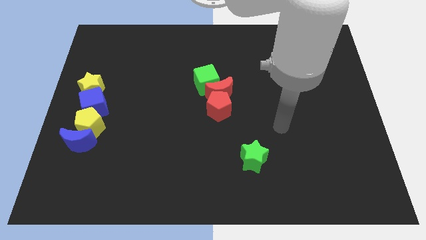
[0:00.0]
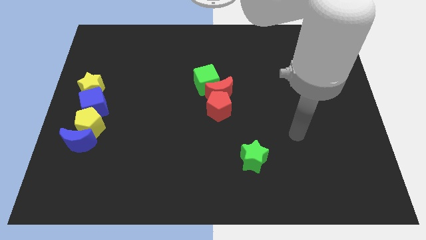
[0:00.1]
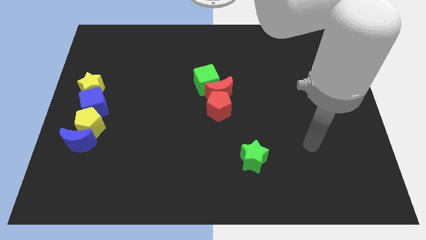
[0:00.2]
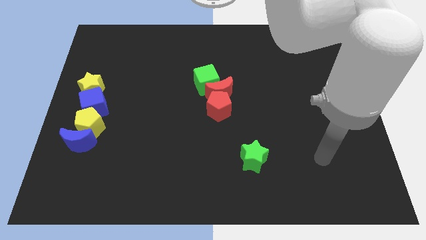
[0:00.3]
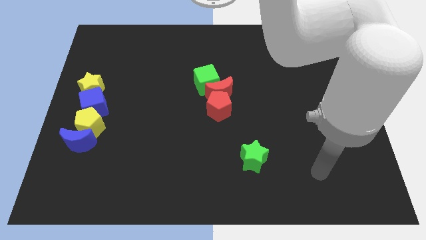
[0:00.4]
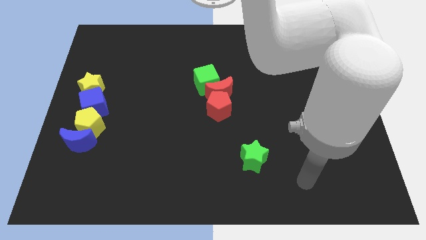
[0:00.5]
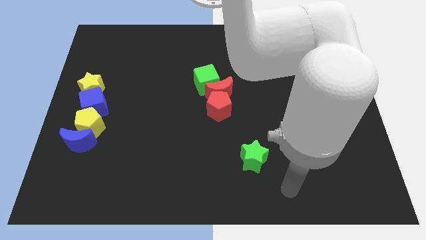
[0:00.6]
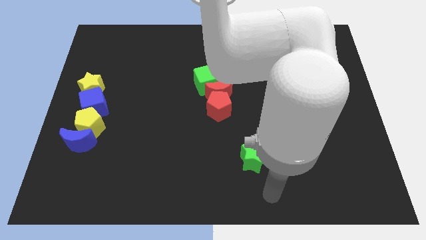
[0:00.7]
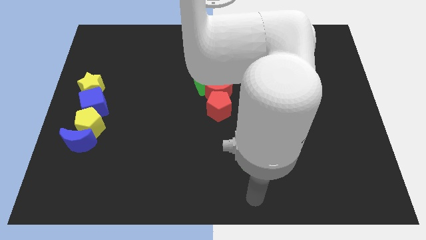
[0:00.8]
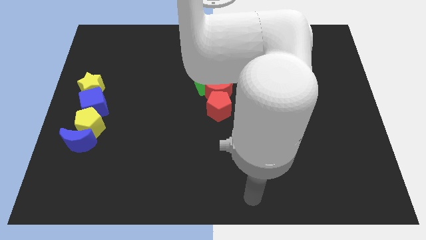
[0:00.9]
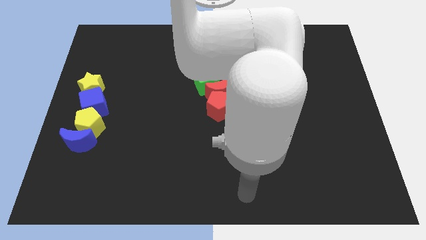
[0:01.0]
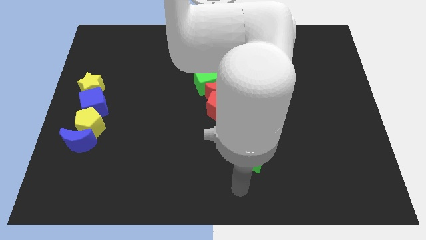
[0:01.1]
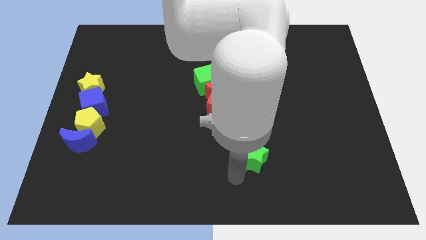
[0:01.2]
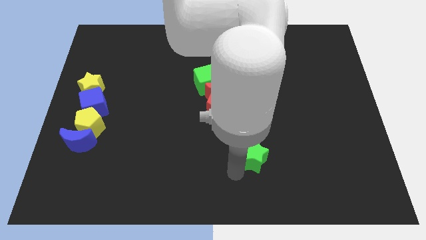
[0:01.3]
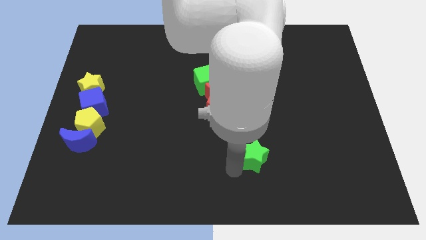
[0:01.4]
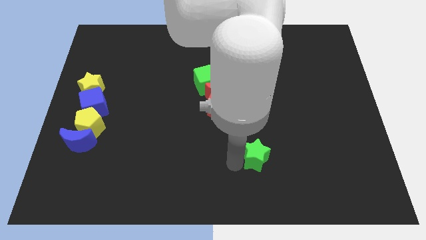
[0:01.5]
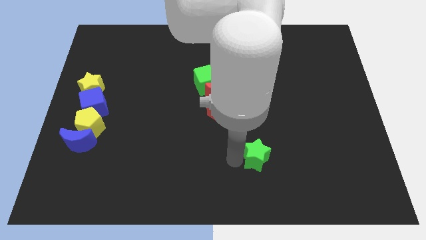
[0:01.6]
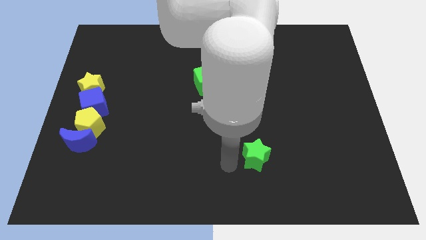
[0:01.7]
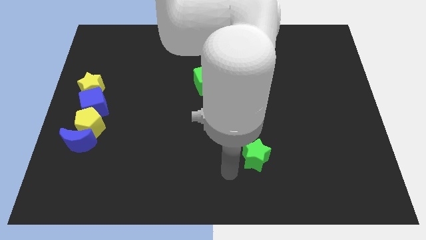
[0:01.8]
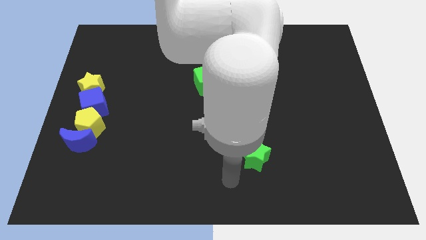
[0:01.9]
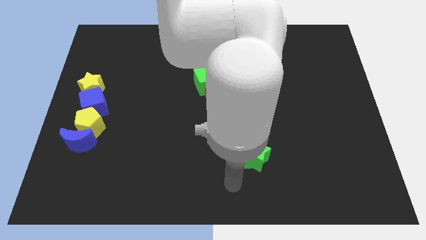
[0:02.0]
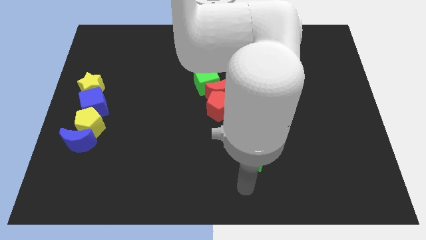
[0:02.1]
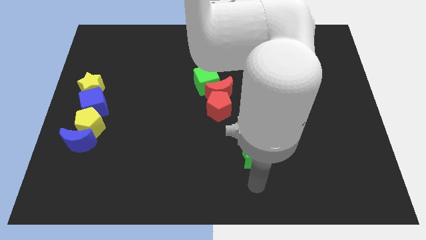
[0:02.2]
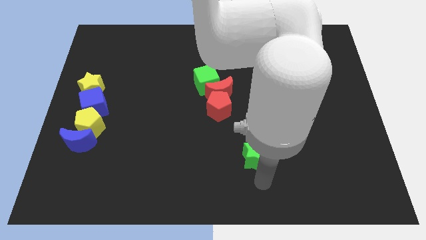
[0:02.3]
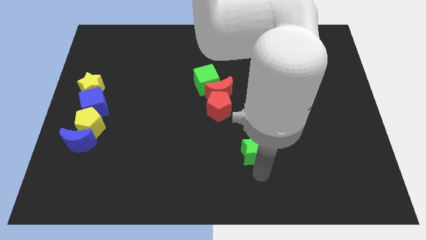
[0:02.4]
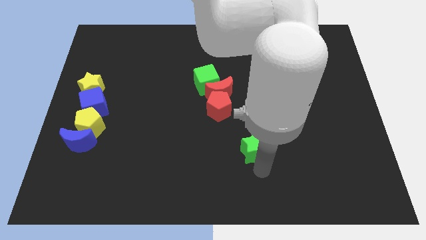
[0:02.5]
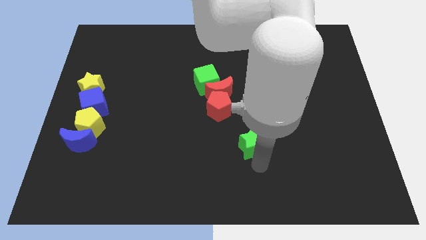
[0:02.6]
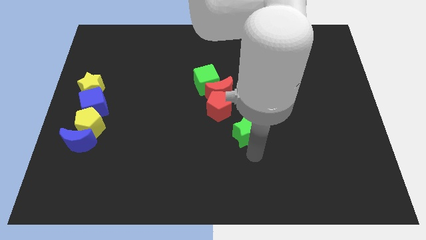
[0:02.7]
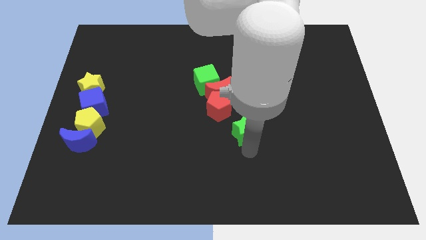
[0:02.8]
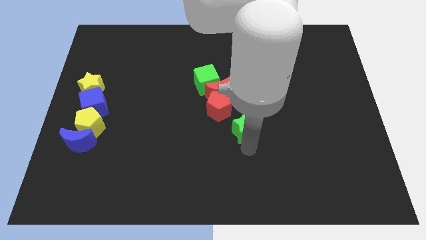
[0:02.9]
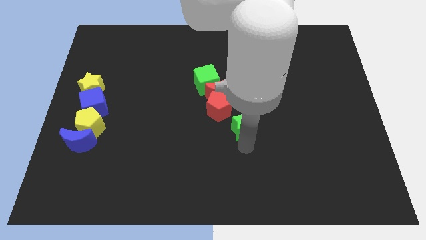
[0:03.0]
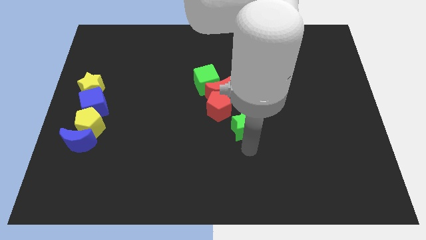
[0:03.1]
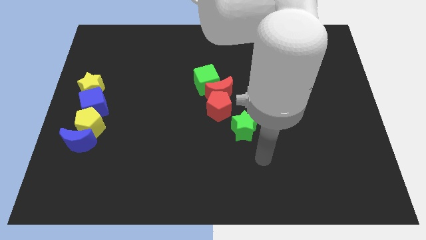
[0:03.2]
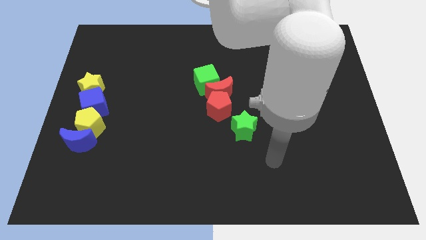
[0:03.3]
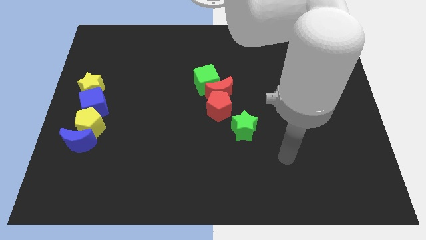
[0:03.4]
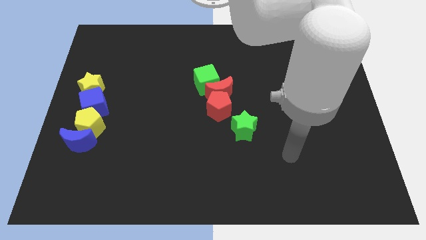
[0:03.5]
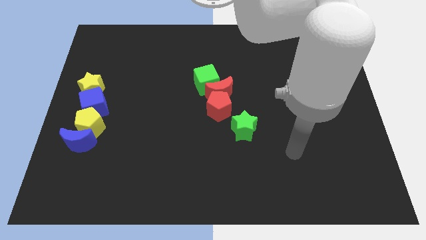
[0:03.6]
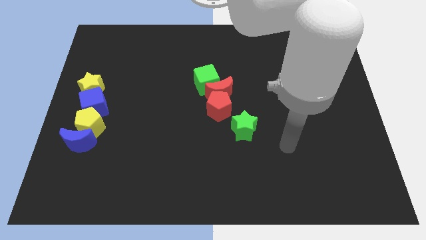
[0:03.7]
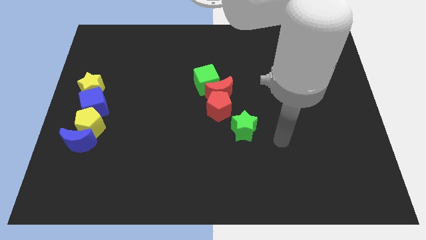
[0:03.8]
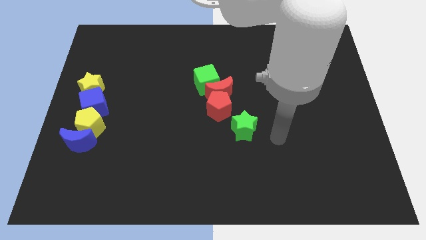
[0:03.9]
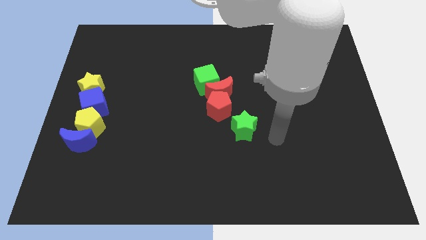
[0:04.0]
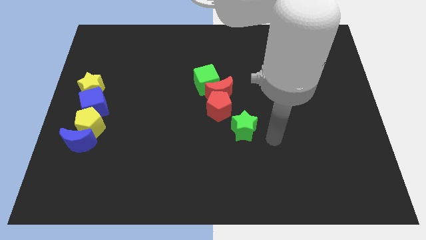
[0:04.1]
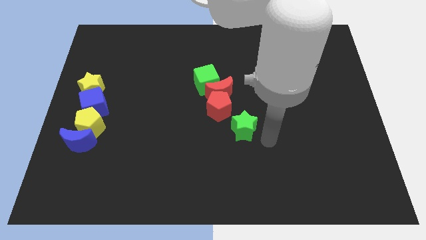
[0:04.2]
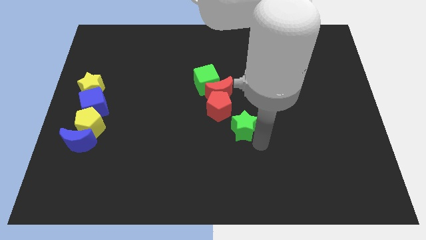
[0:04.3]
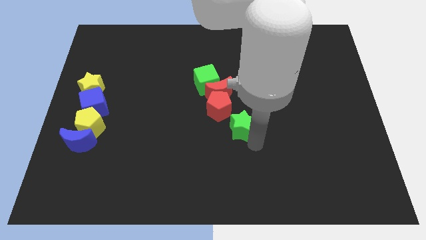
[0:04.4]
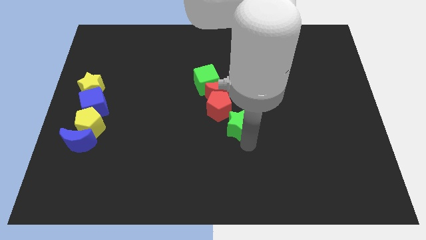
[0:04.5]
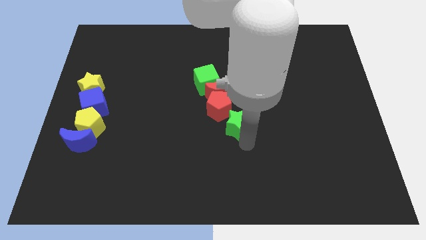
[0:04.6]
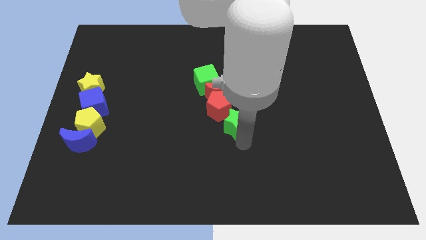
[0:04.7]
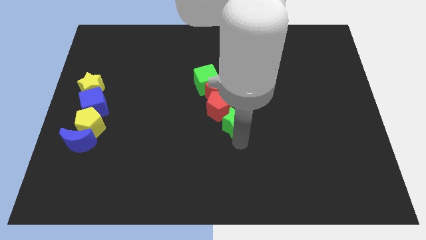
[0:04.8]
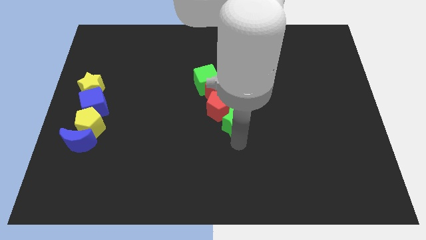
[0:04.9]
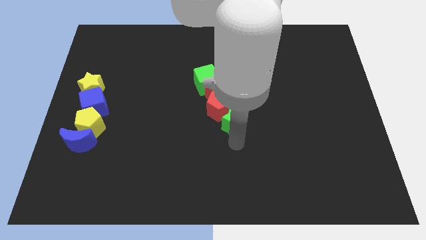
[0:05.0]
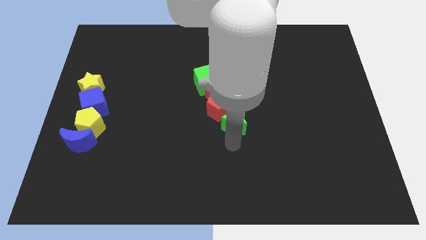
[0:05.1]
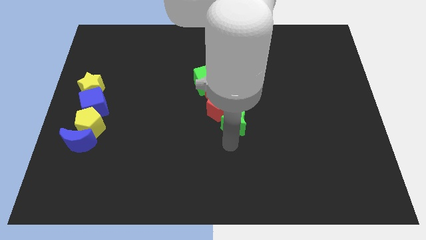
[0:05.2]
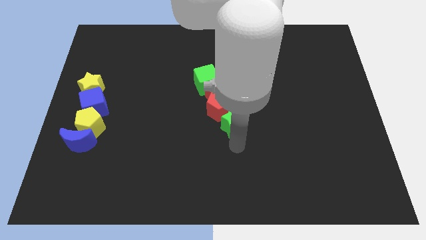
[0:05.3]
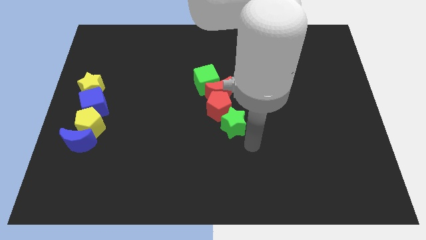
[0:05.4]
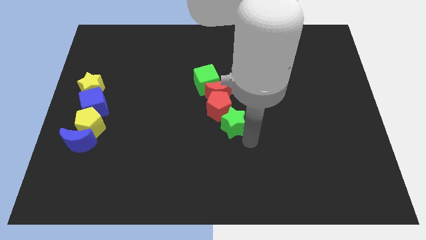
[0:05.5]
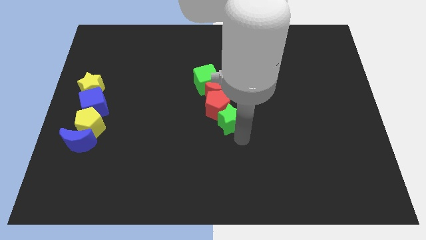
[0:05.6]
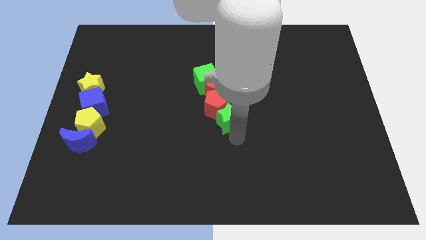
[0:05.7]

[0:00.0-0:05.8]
slide the green star into the red pentagon

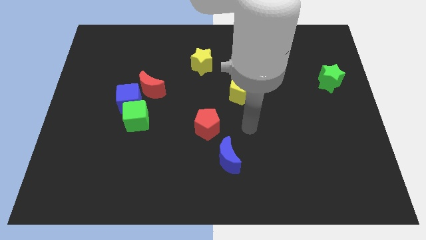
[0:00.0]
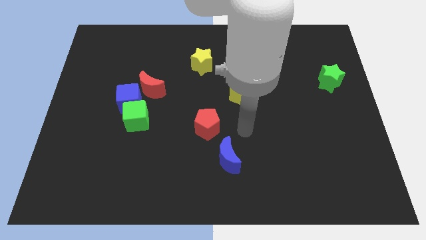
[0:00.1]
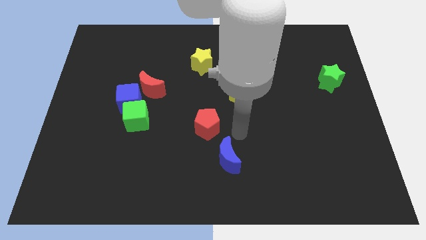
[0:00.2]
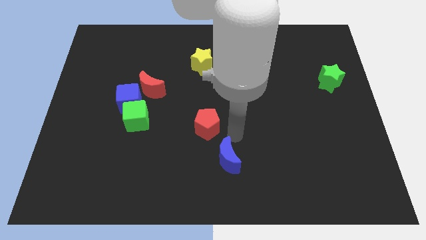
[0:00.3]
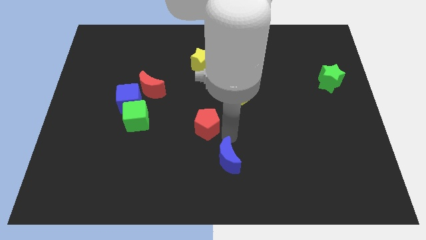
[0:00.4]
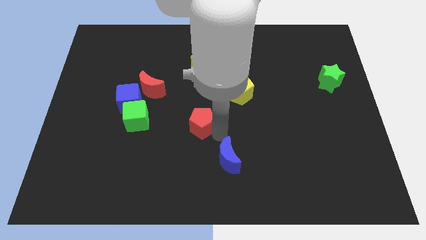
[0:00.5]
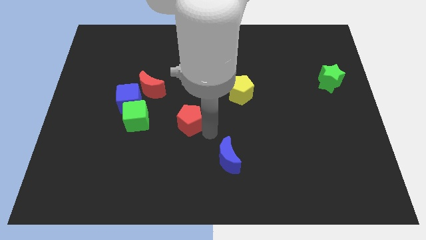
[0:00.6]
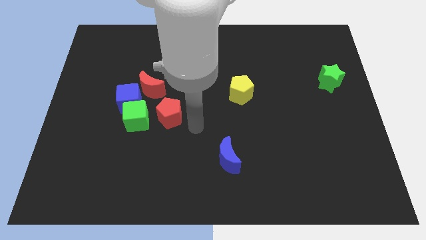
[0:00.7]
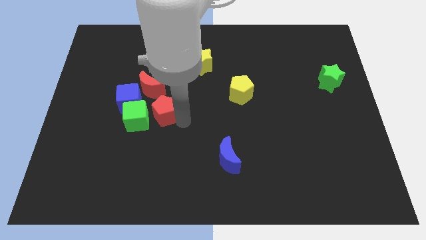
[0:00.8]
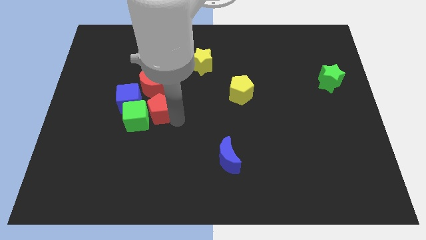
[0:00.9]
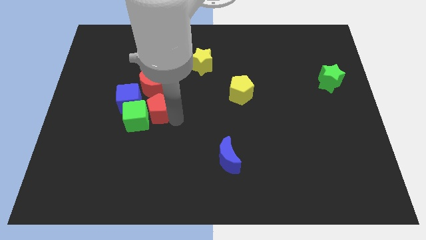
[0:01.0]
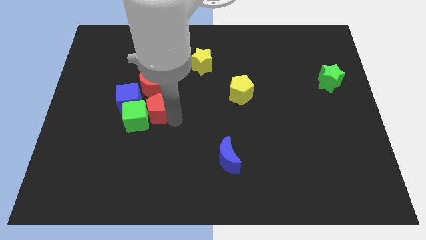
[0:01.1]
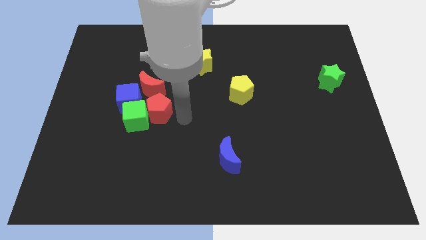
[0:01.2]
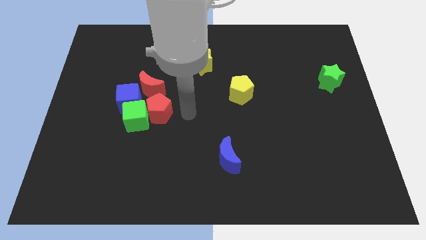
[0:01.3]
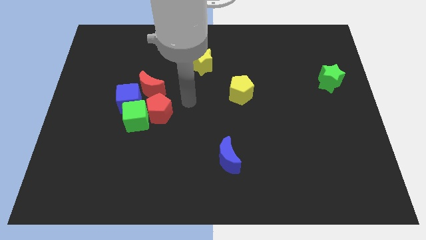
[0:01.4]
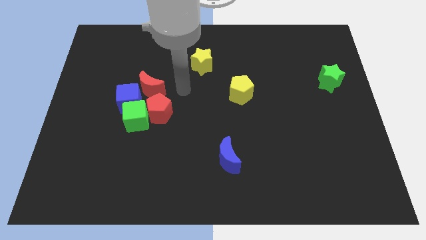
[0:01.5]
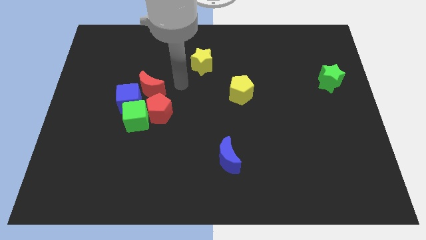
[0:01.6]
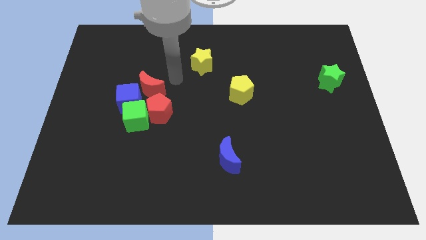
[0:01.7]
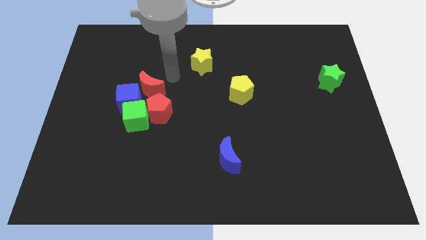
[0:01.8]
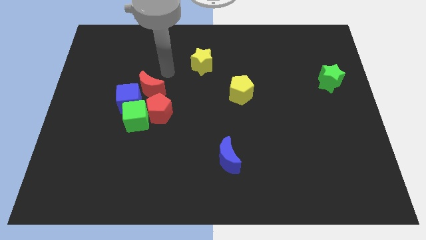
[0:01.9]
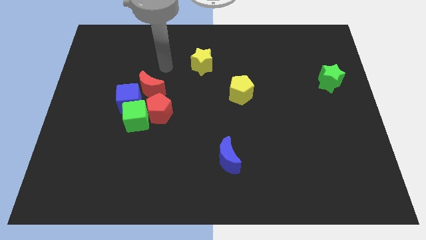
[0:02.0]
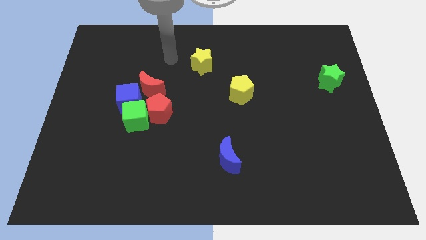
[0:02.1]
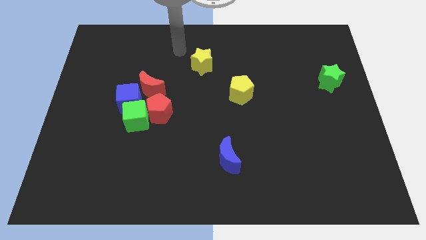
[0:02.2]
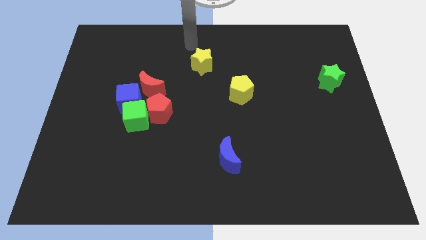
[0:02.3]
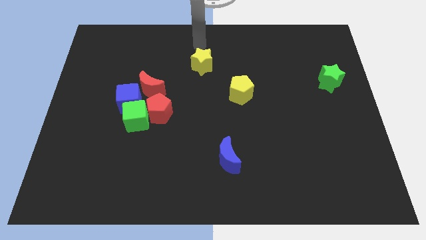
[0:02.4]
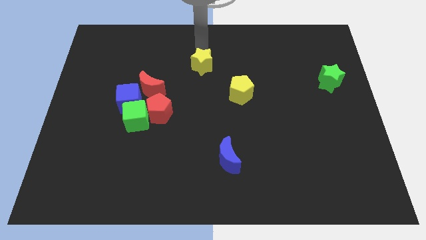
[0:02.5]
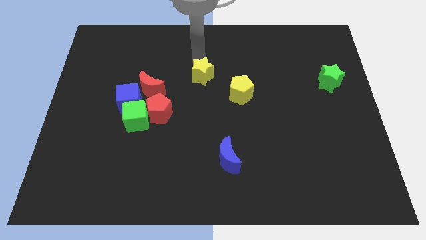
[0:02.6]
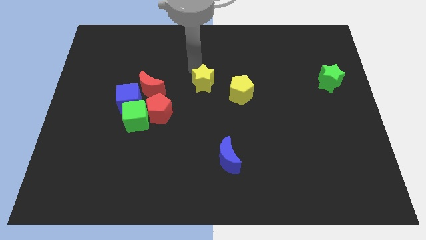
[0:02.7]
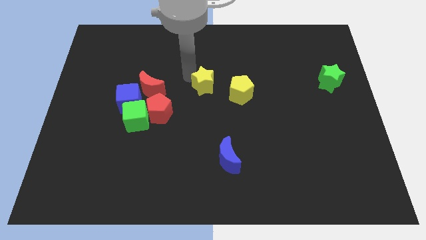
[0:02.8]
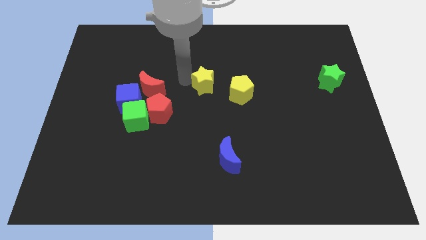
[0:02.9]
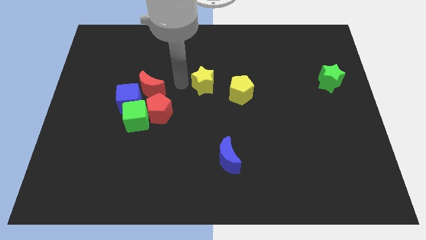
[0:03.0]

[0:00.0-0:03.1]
slide the red pentagon into the red crescent
